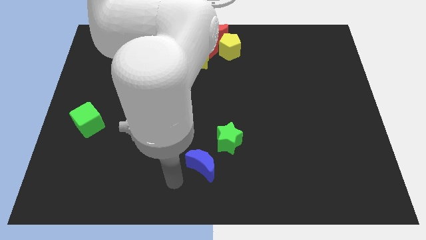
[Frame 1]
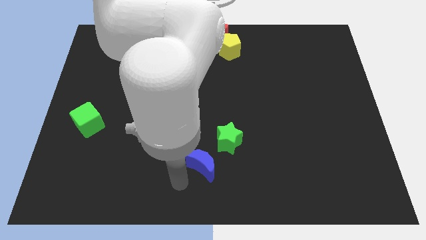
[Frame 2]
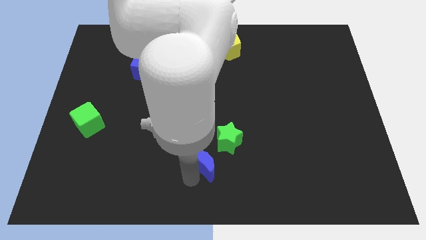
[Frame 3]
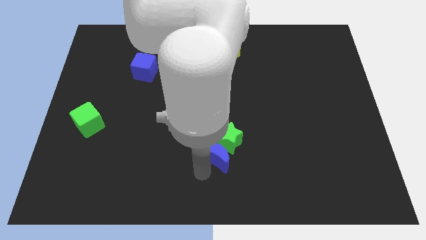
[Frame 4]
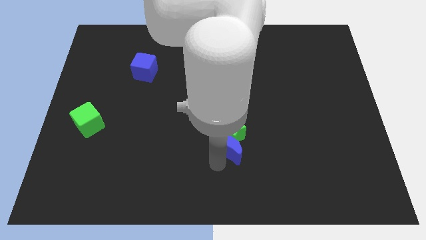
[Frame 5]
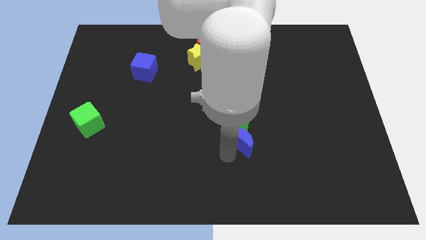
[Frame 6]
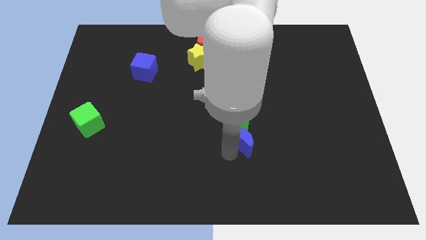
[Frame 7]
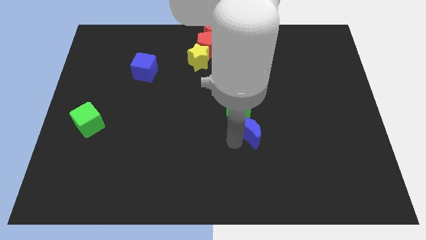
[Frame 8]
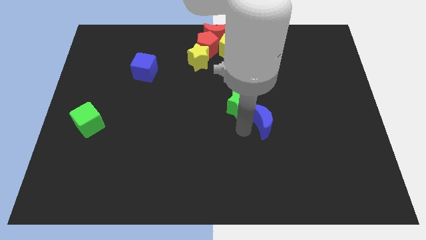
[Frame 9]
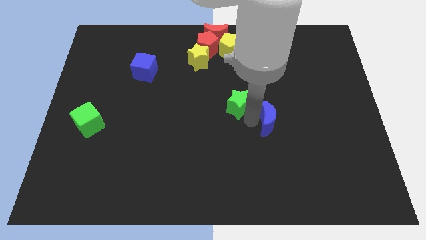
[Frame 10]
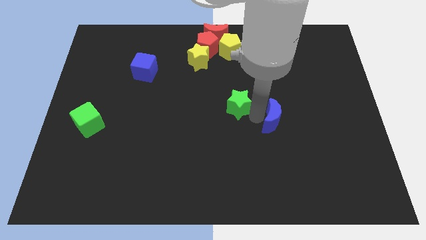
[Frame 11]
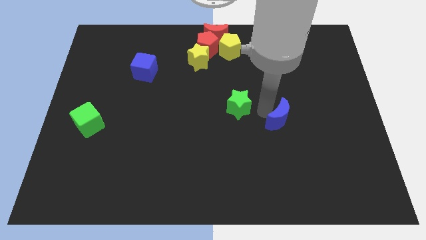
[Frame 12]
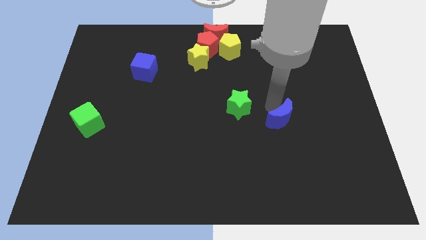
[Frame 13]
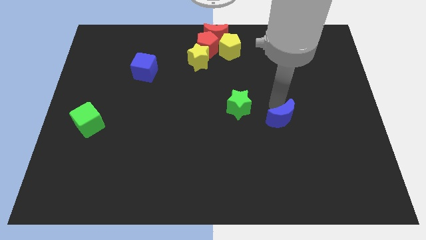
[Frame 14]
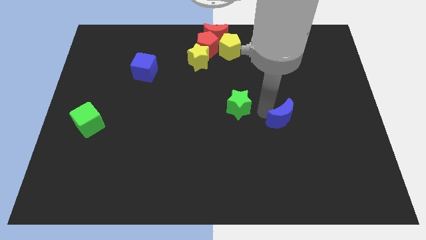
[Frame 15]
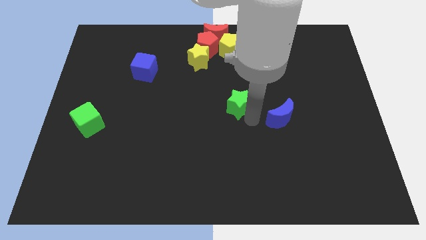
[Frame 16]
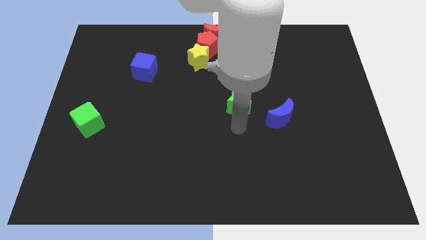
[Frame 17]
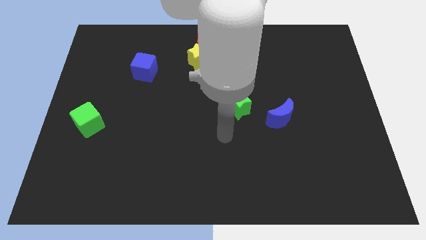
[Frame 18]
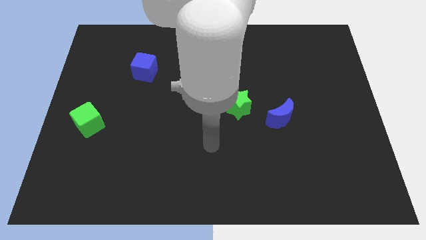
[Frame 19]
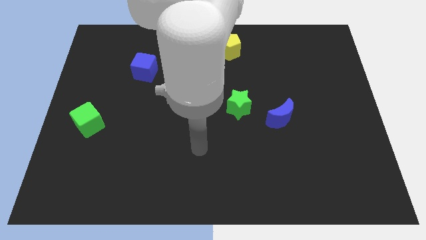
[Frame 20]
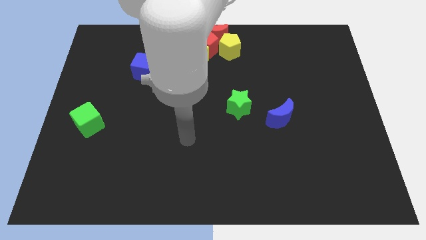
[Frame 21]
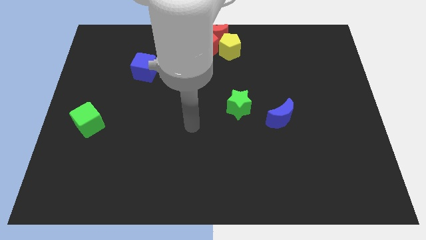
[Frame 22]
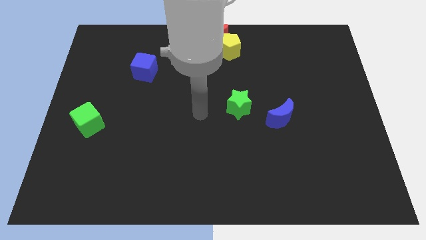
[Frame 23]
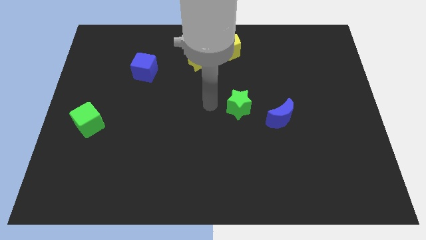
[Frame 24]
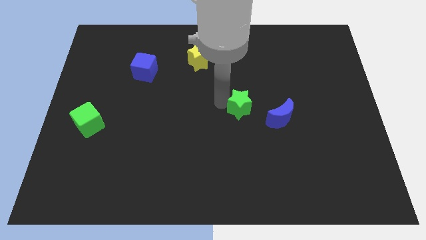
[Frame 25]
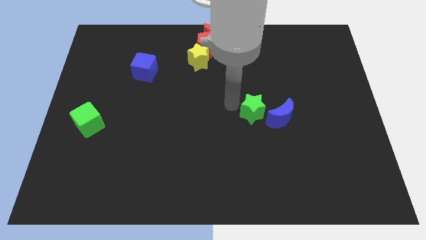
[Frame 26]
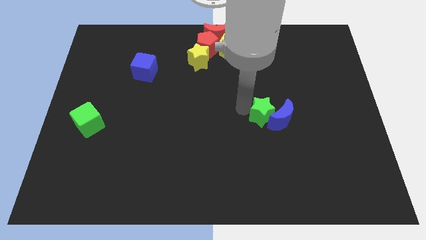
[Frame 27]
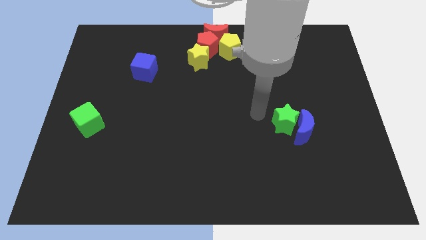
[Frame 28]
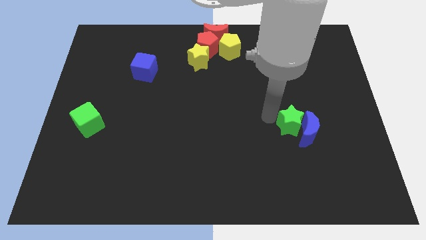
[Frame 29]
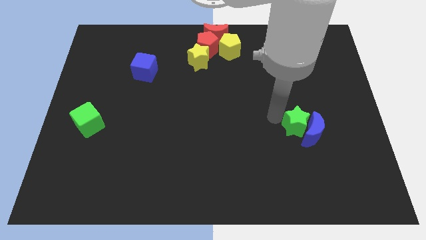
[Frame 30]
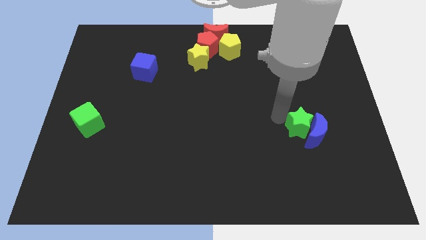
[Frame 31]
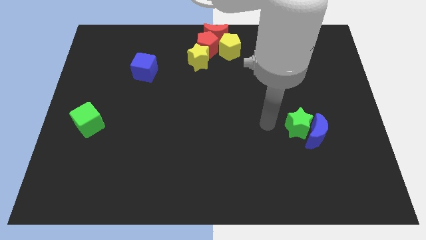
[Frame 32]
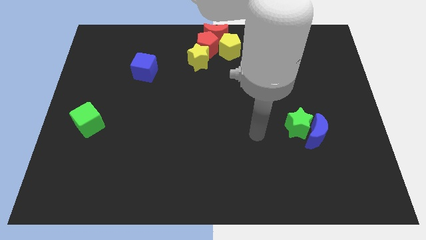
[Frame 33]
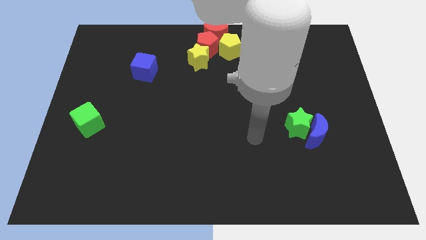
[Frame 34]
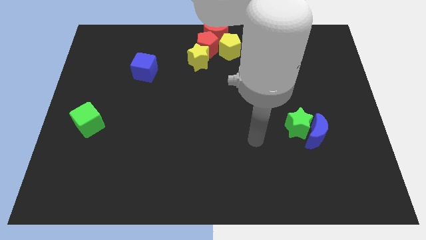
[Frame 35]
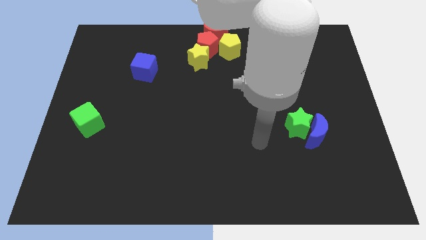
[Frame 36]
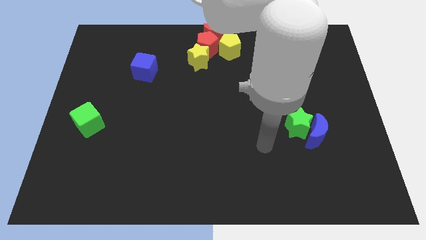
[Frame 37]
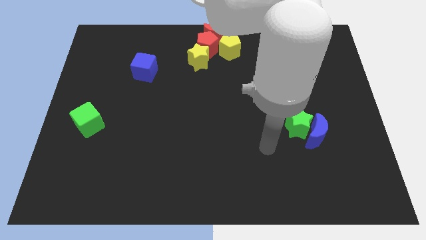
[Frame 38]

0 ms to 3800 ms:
move the green star and blue crescent towards the center right of the board

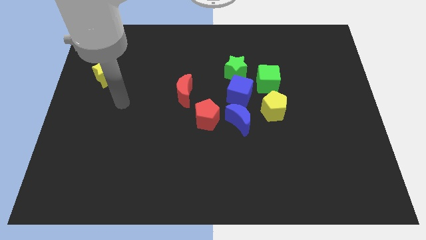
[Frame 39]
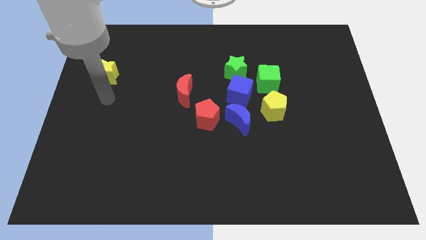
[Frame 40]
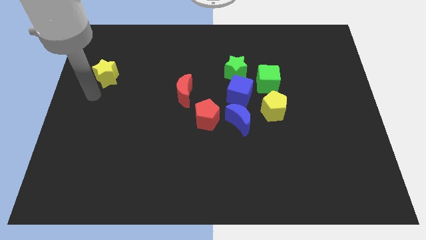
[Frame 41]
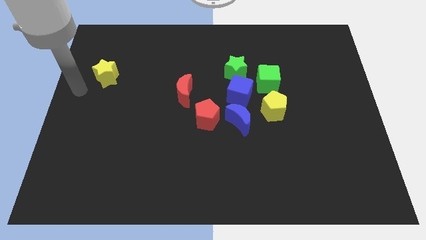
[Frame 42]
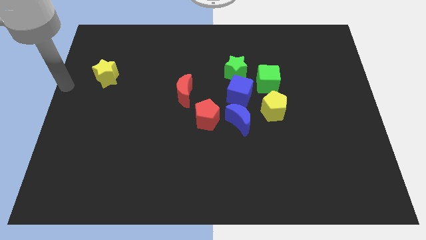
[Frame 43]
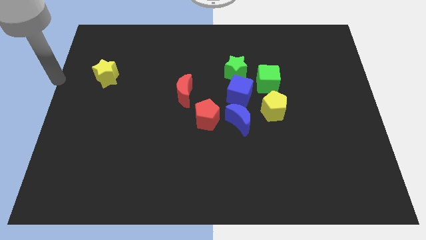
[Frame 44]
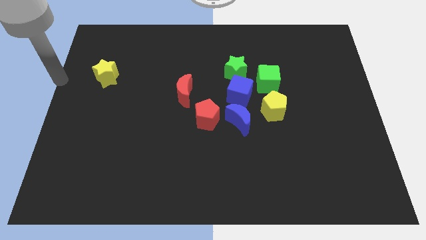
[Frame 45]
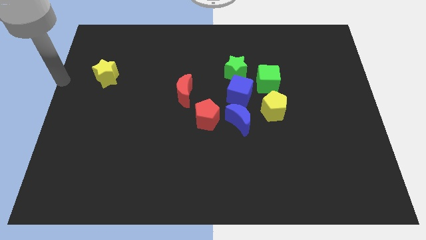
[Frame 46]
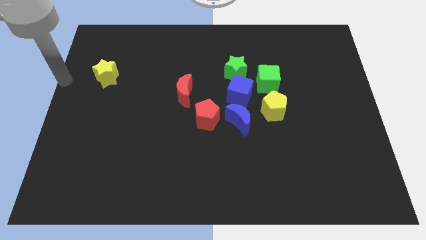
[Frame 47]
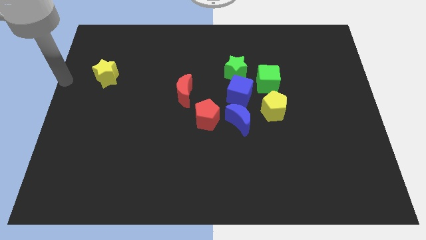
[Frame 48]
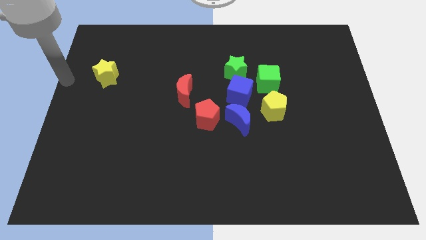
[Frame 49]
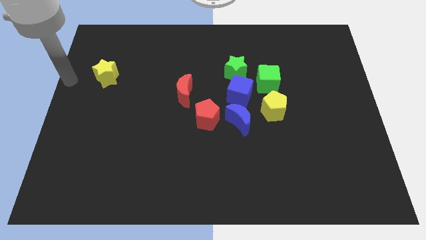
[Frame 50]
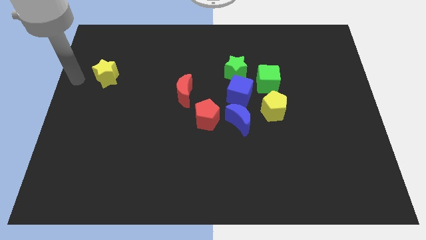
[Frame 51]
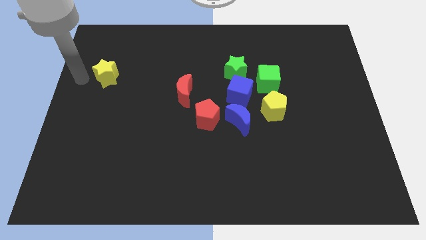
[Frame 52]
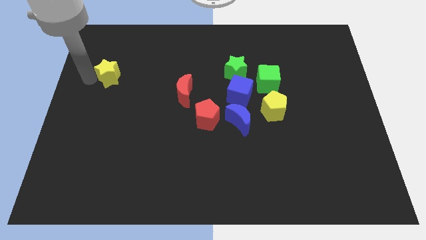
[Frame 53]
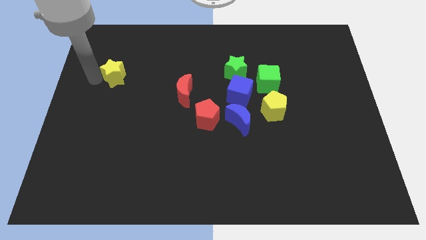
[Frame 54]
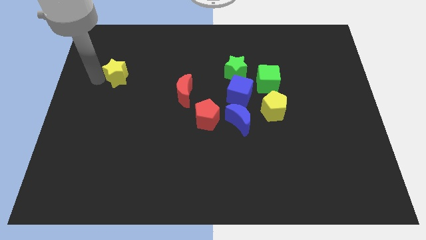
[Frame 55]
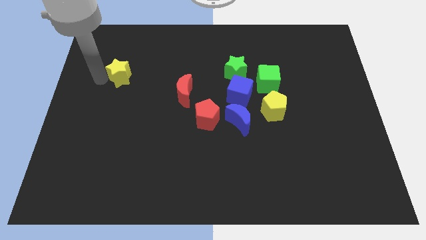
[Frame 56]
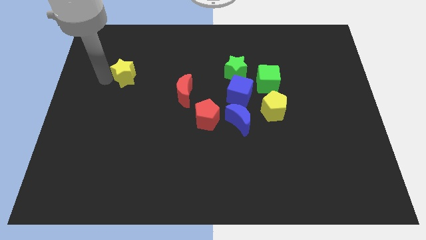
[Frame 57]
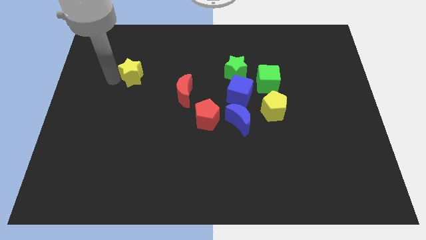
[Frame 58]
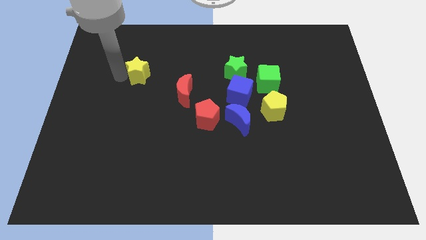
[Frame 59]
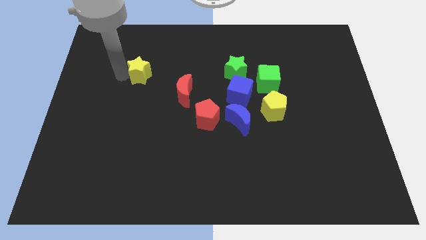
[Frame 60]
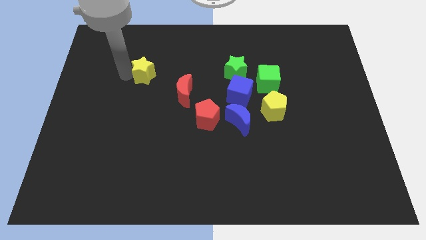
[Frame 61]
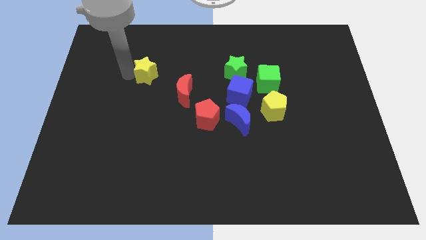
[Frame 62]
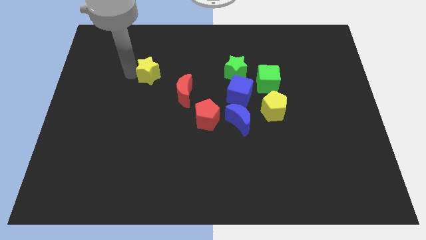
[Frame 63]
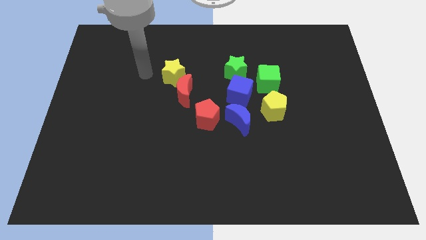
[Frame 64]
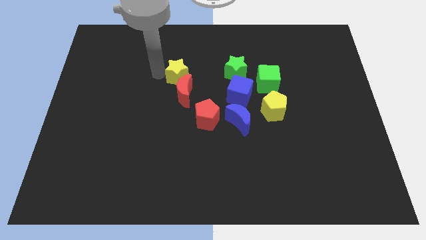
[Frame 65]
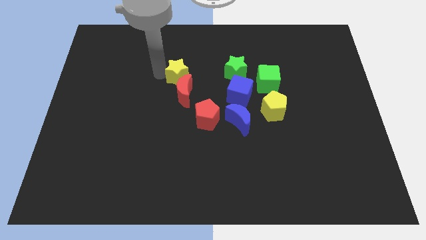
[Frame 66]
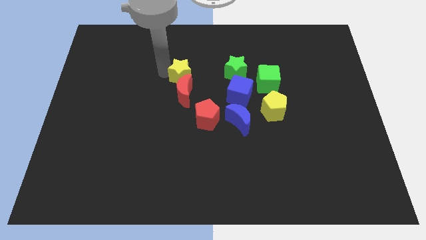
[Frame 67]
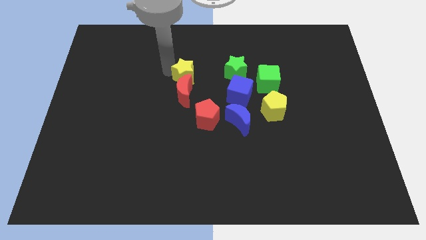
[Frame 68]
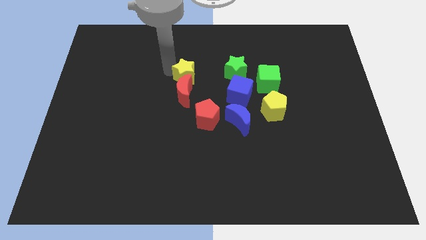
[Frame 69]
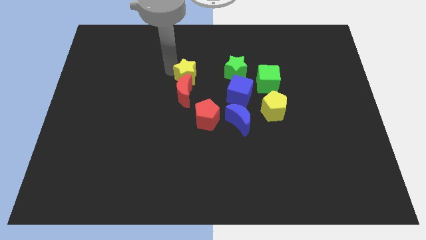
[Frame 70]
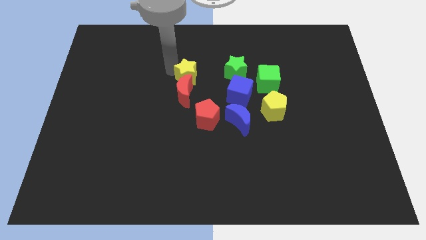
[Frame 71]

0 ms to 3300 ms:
push the yellow star into the top side of the red crescent

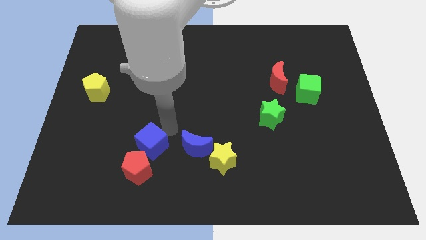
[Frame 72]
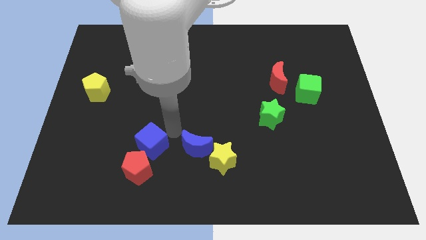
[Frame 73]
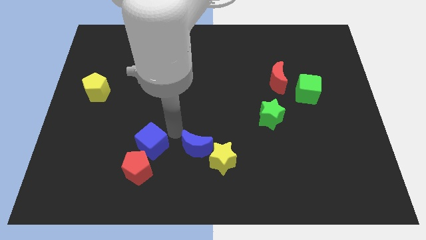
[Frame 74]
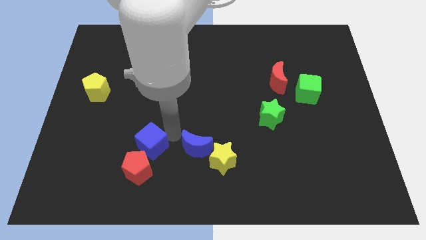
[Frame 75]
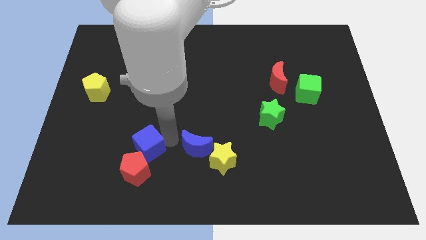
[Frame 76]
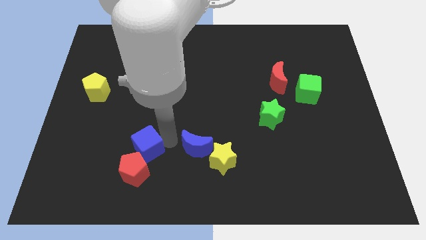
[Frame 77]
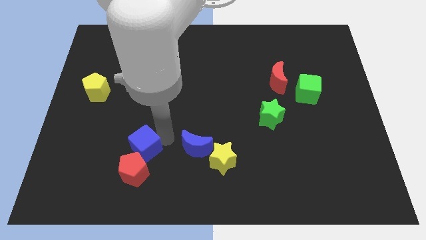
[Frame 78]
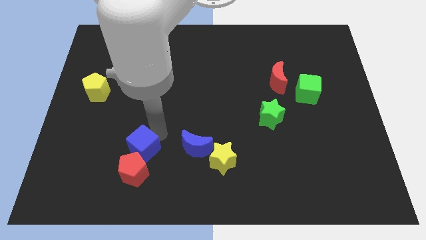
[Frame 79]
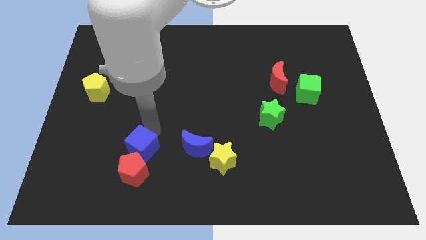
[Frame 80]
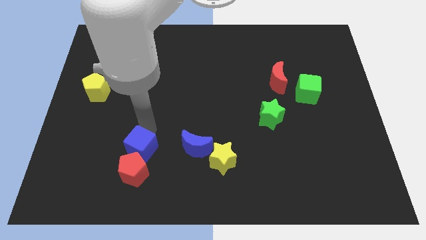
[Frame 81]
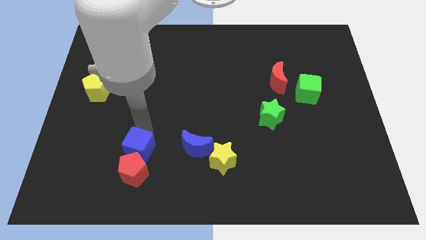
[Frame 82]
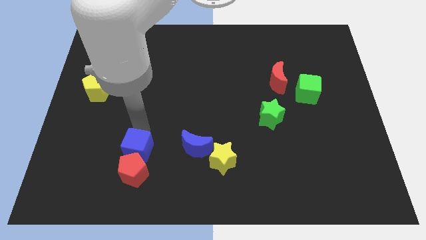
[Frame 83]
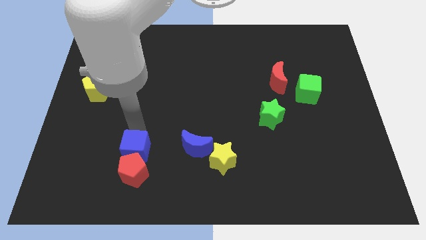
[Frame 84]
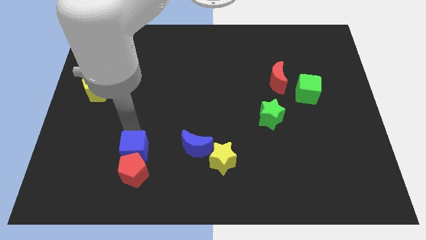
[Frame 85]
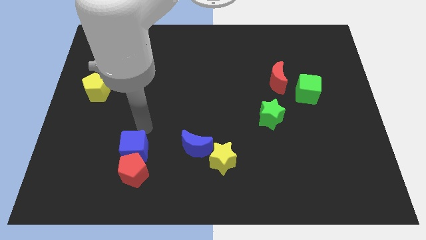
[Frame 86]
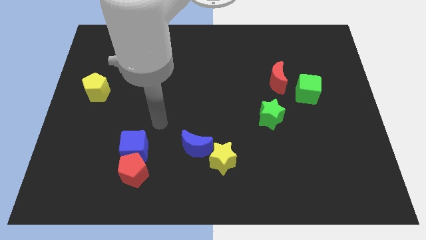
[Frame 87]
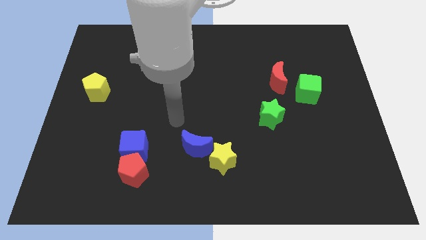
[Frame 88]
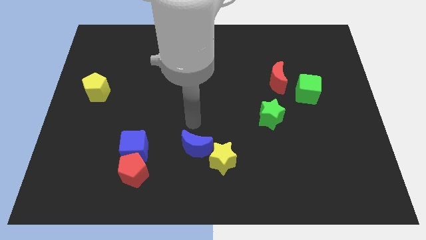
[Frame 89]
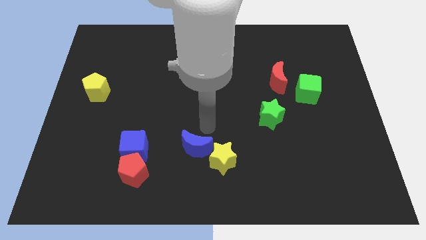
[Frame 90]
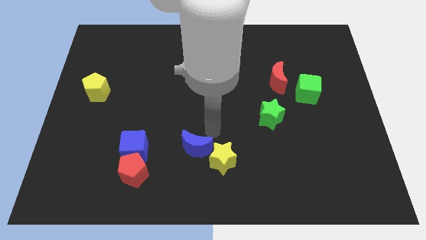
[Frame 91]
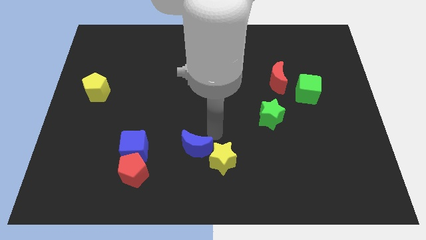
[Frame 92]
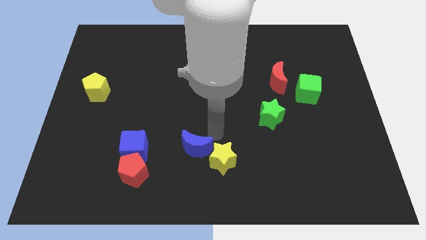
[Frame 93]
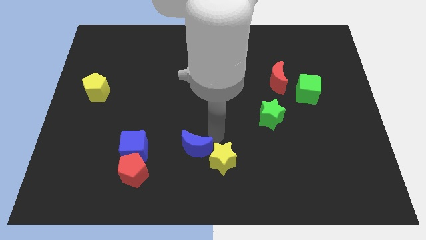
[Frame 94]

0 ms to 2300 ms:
push blue cube at the top of the red pentagon
